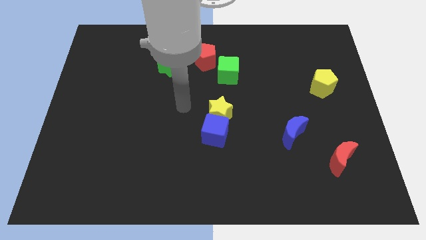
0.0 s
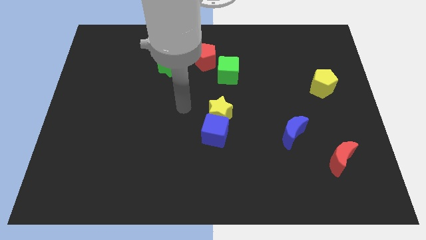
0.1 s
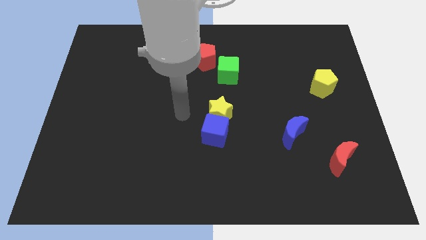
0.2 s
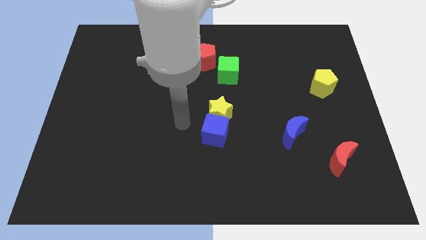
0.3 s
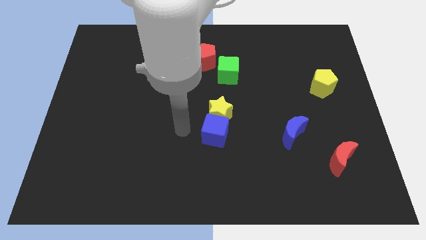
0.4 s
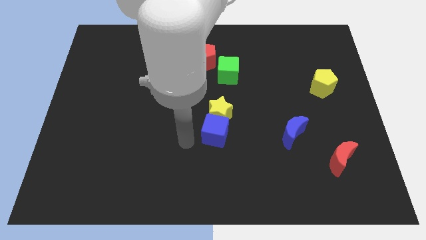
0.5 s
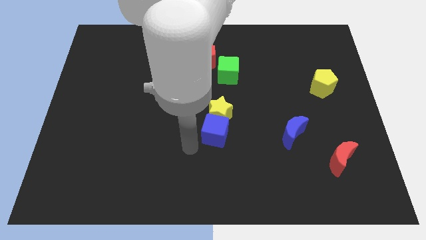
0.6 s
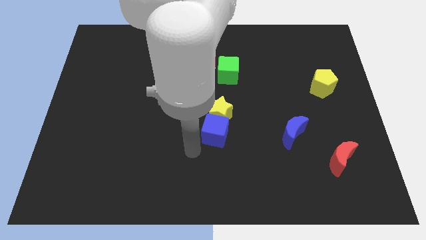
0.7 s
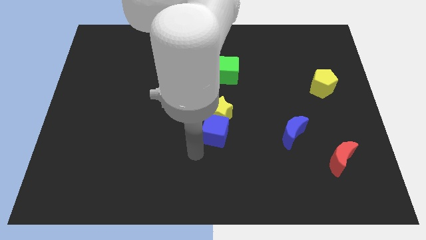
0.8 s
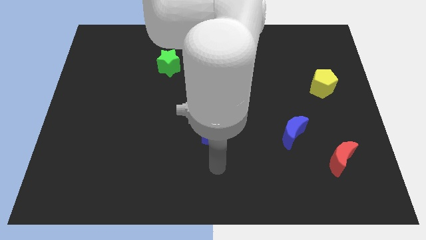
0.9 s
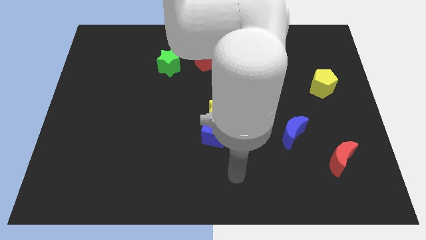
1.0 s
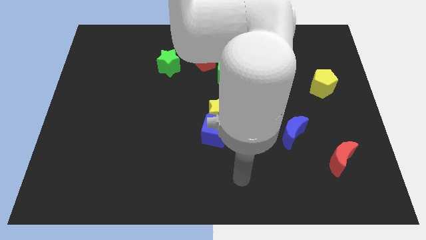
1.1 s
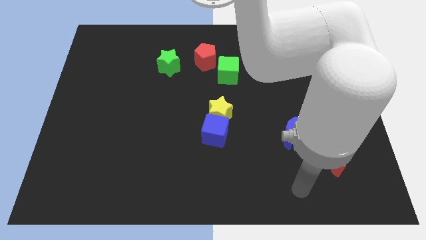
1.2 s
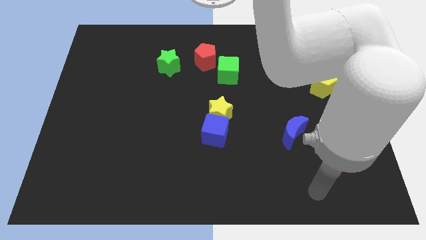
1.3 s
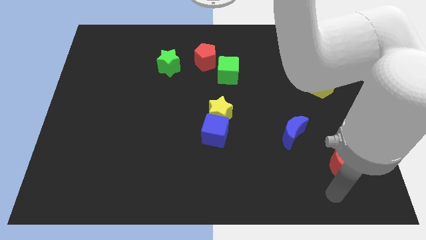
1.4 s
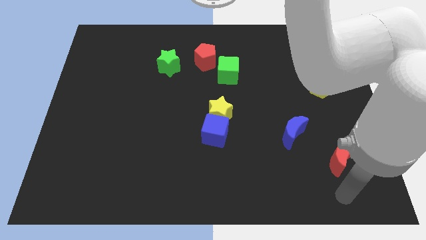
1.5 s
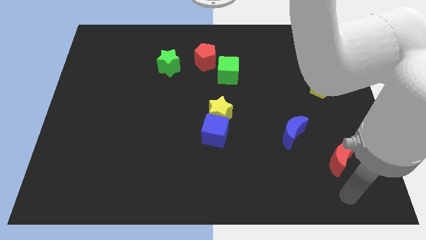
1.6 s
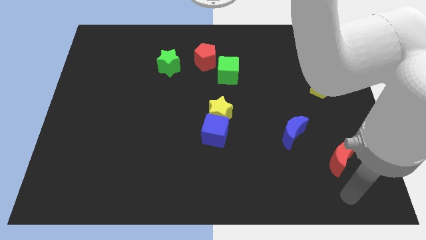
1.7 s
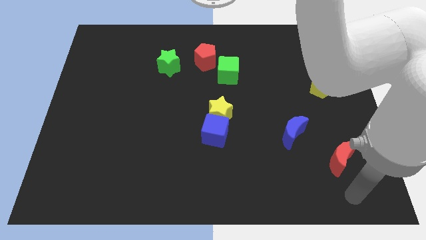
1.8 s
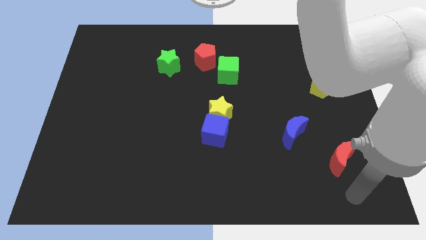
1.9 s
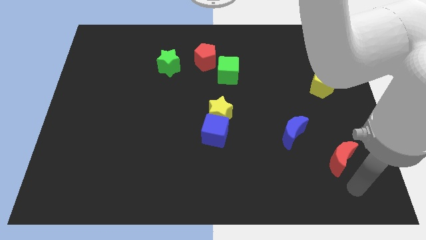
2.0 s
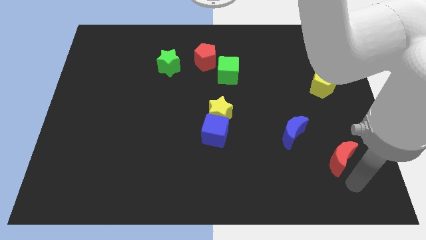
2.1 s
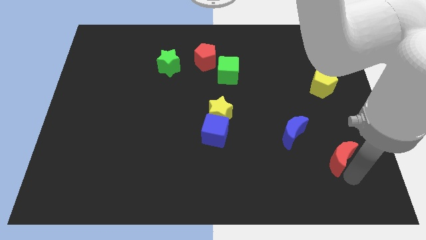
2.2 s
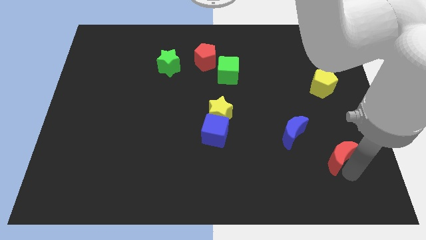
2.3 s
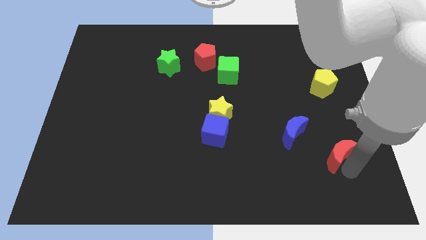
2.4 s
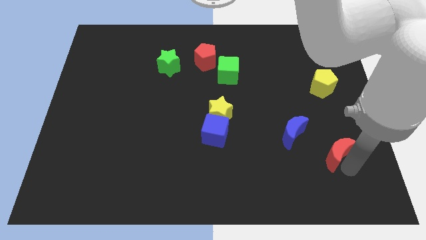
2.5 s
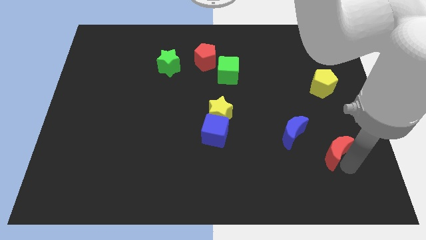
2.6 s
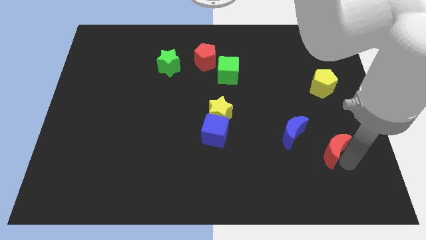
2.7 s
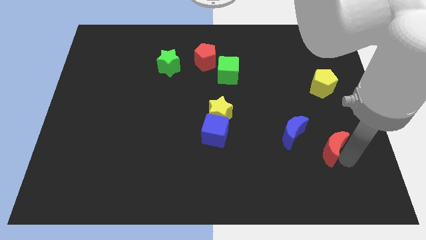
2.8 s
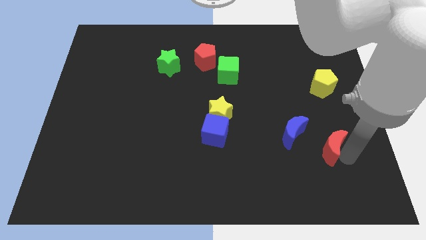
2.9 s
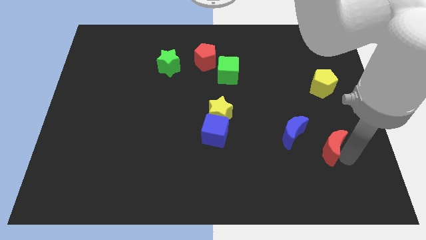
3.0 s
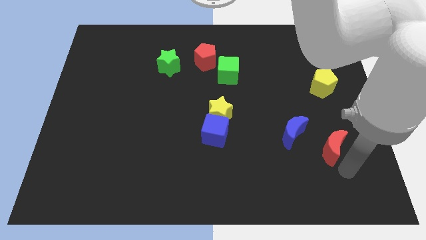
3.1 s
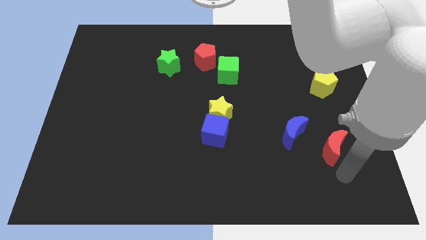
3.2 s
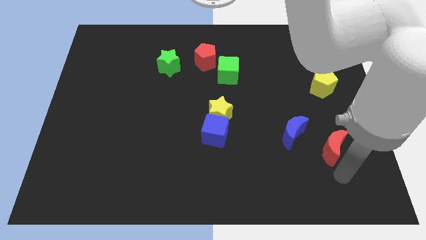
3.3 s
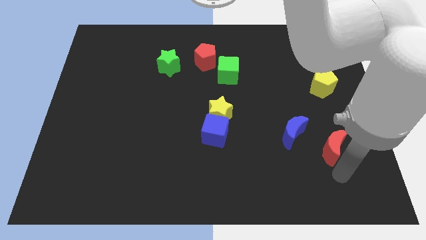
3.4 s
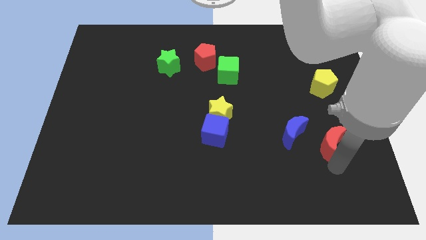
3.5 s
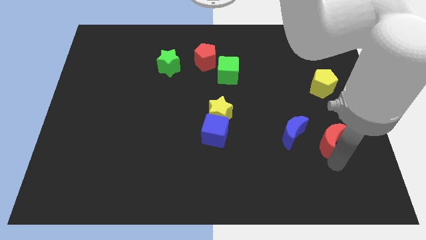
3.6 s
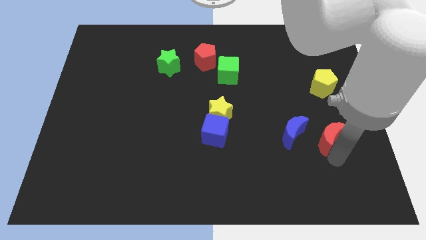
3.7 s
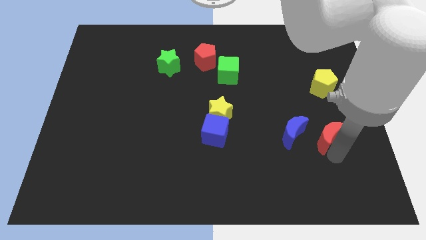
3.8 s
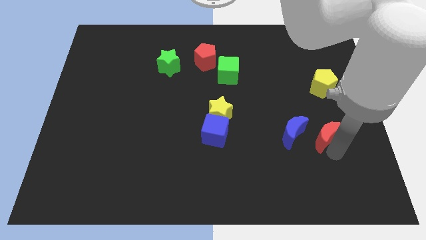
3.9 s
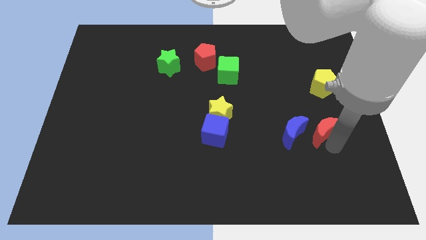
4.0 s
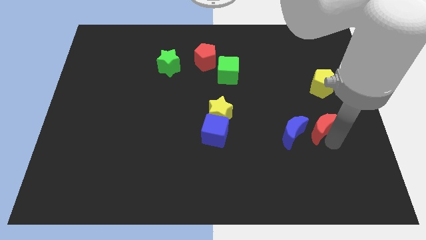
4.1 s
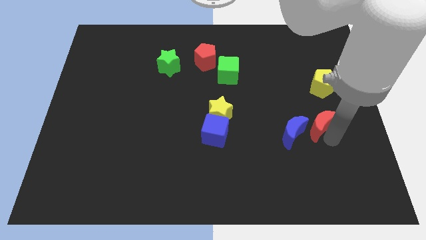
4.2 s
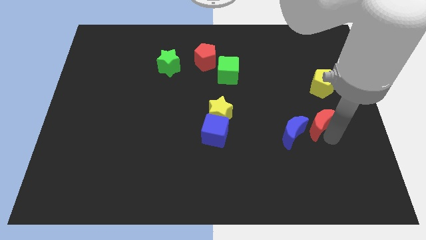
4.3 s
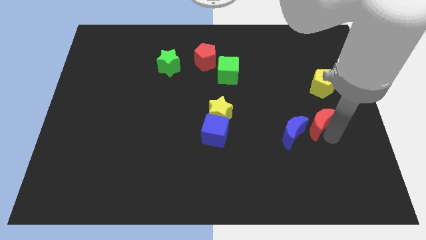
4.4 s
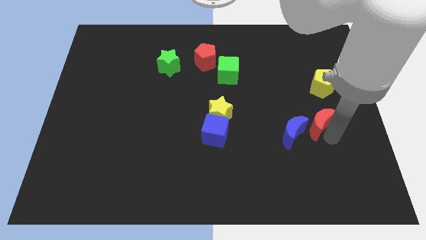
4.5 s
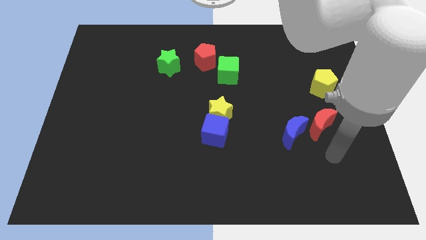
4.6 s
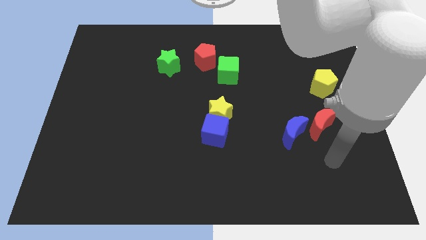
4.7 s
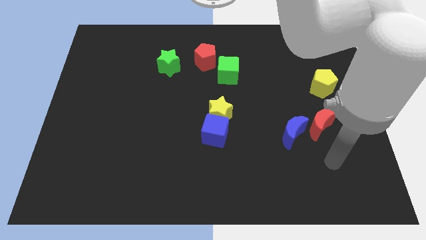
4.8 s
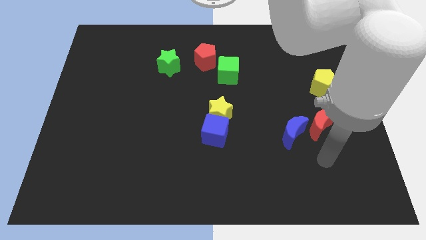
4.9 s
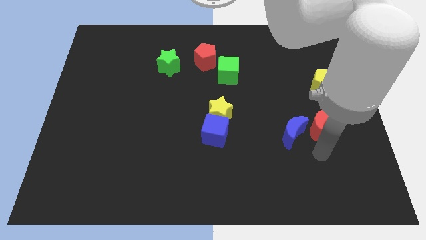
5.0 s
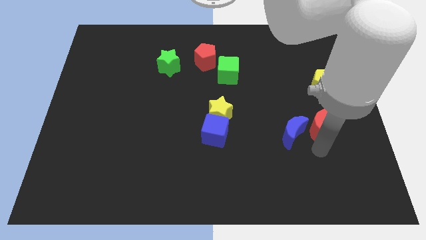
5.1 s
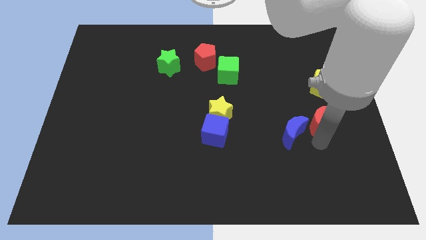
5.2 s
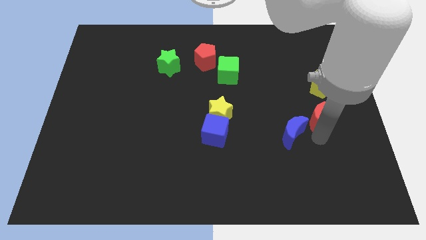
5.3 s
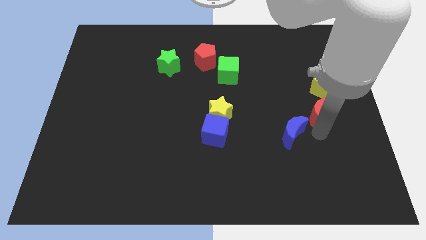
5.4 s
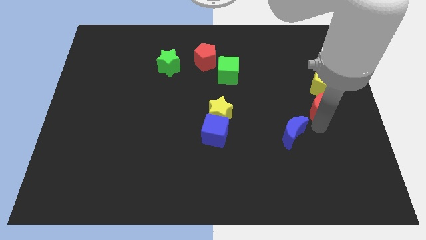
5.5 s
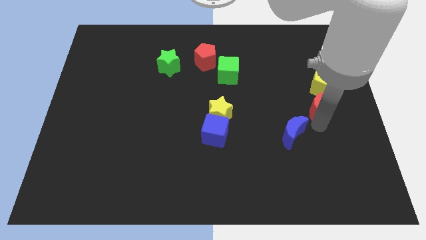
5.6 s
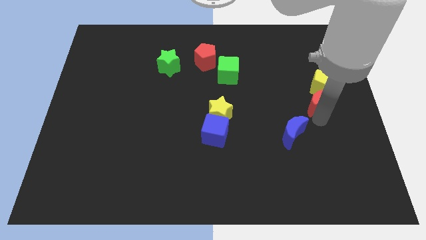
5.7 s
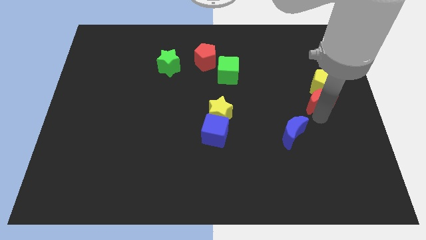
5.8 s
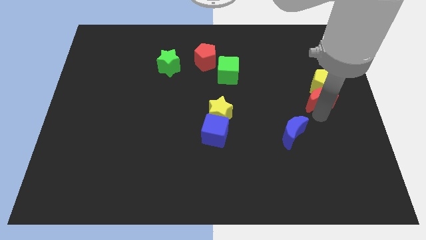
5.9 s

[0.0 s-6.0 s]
put the red moon towards the yellow pentagon

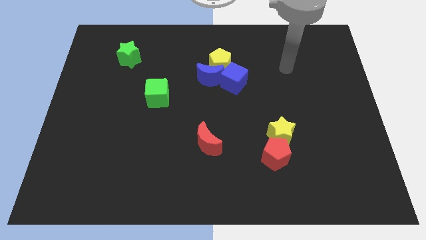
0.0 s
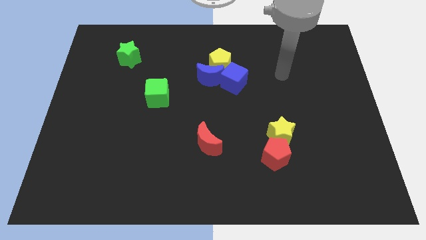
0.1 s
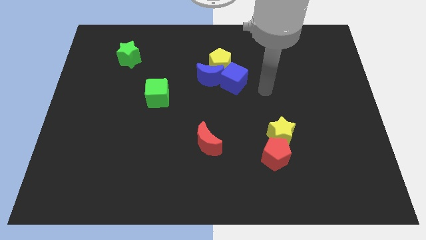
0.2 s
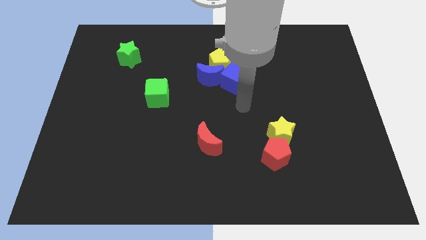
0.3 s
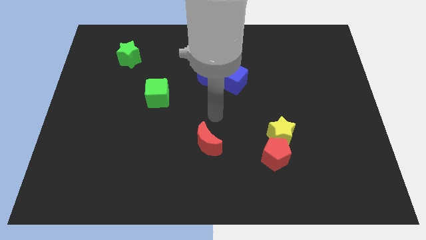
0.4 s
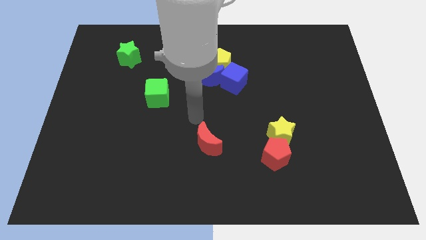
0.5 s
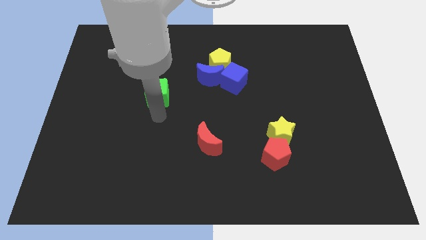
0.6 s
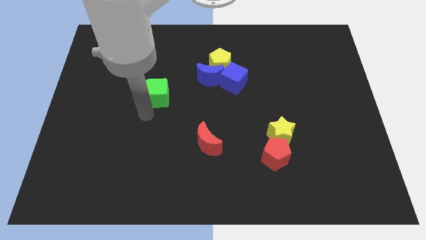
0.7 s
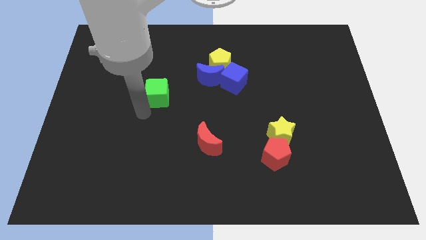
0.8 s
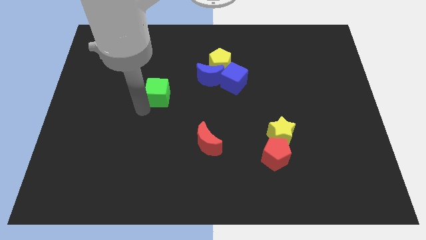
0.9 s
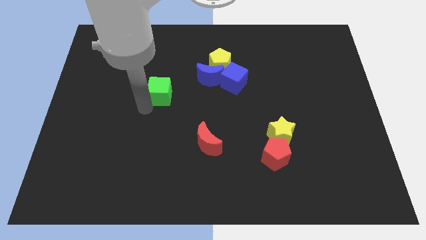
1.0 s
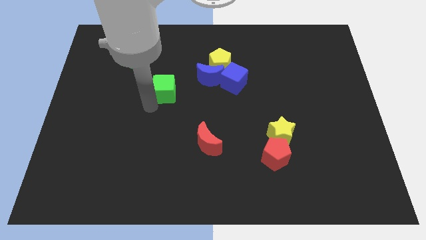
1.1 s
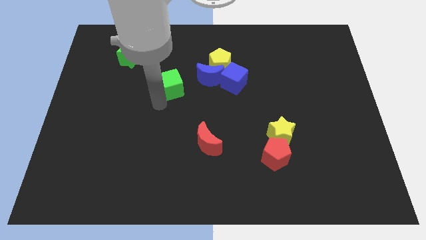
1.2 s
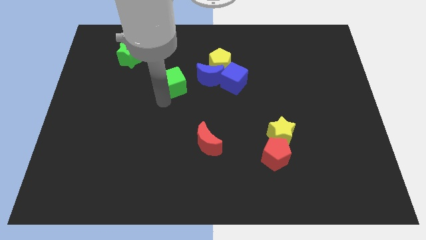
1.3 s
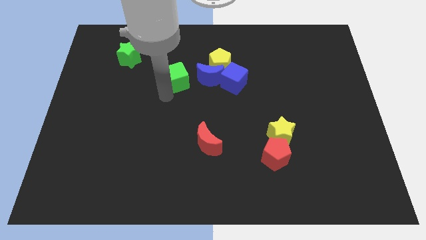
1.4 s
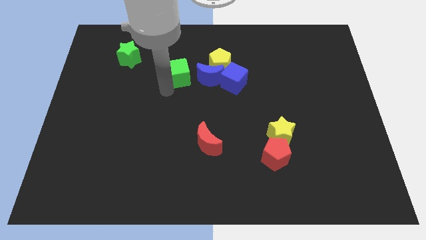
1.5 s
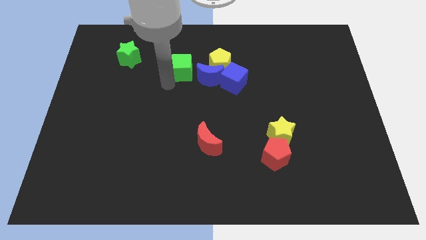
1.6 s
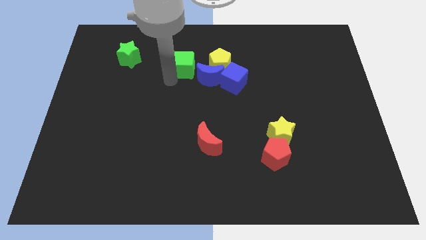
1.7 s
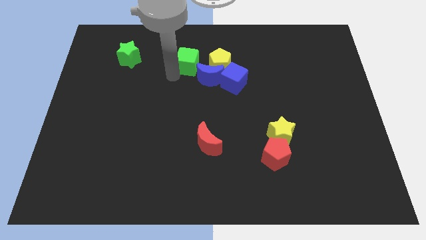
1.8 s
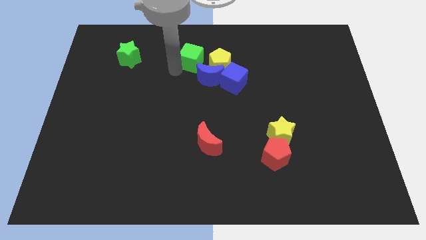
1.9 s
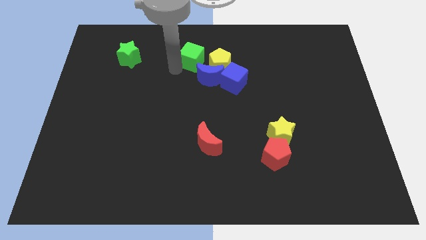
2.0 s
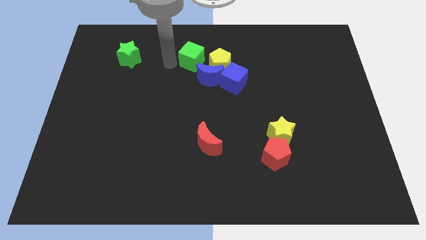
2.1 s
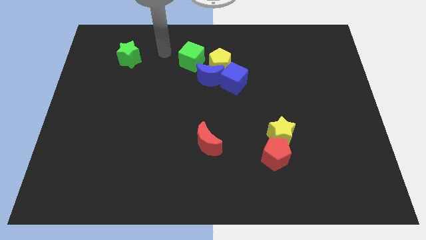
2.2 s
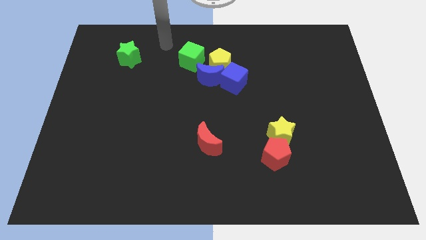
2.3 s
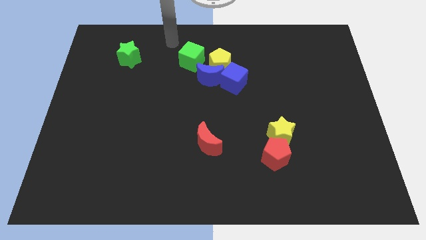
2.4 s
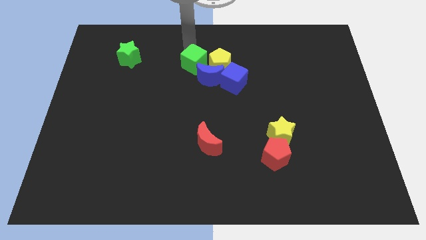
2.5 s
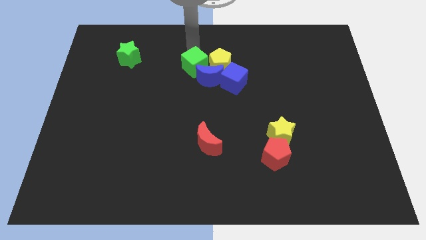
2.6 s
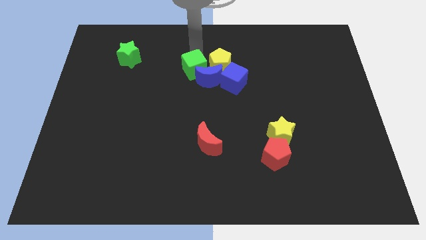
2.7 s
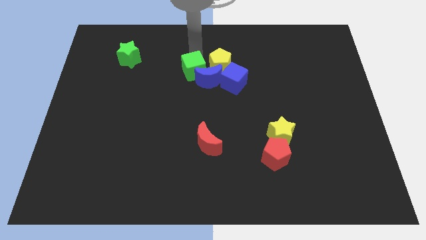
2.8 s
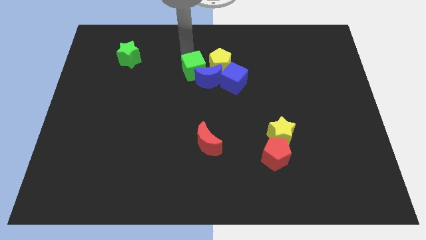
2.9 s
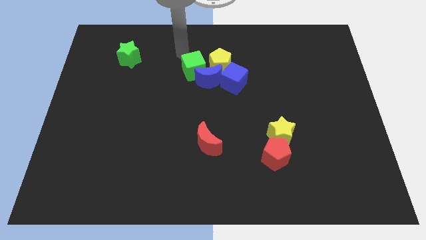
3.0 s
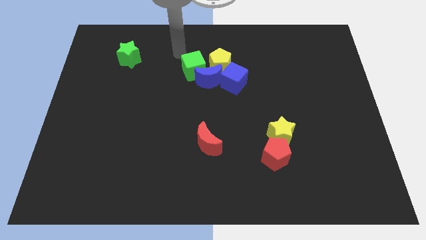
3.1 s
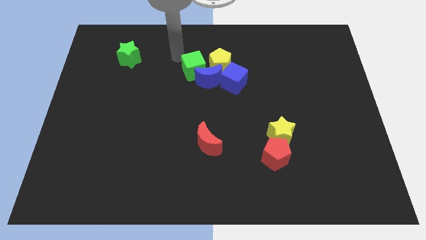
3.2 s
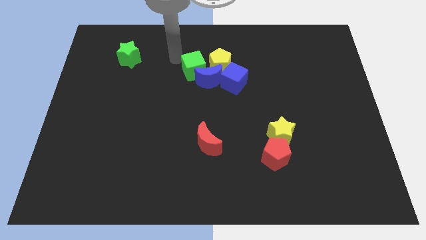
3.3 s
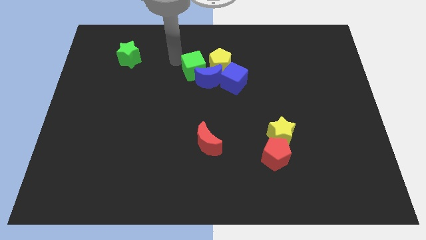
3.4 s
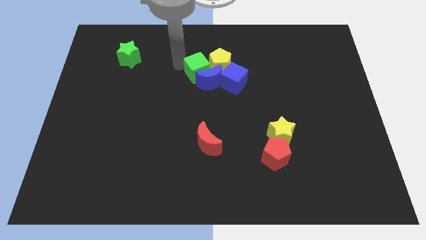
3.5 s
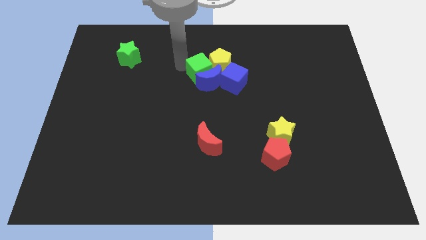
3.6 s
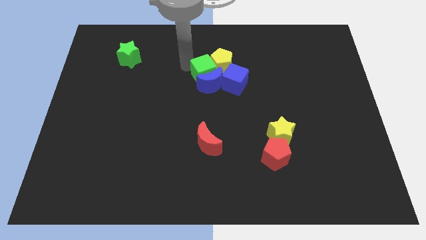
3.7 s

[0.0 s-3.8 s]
move the green cube next to the yellow pentagon
